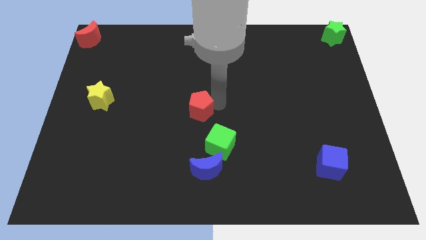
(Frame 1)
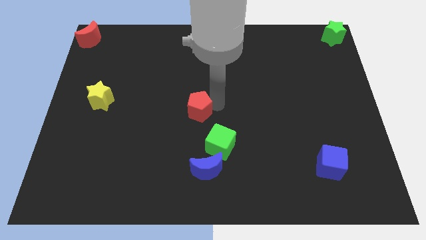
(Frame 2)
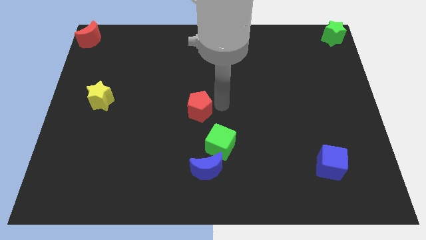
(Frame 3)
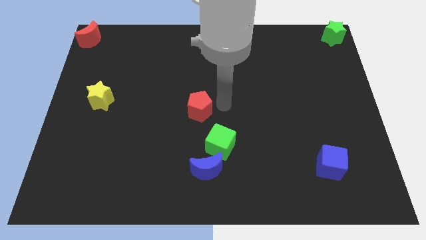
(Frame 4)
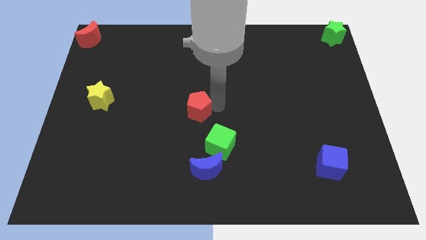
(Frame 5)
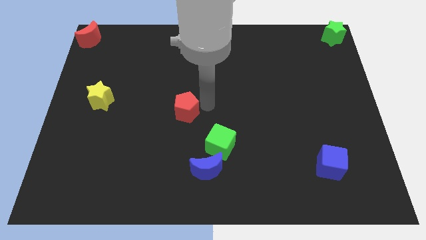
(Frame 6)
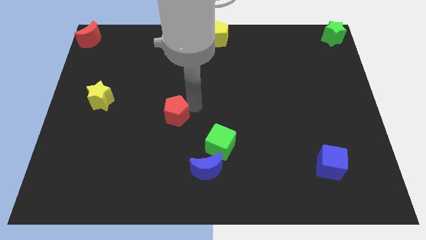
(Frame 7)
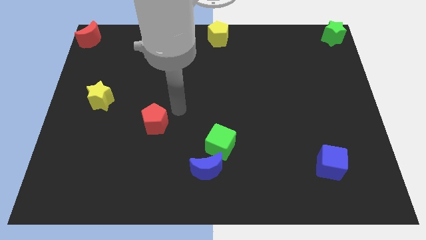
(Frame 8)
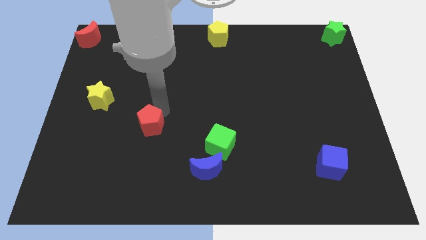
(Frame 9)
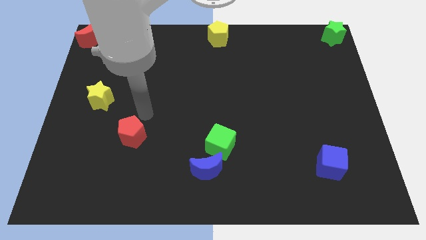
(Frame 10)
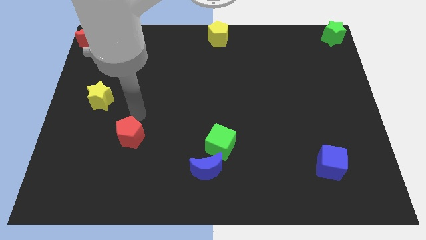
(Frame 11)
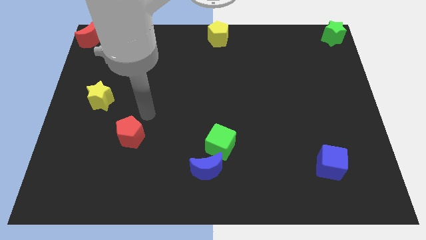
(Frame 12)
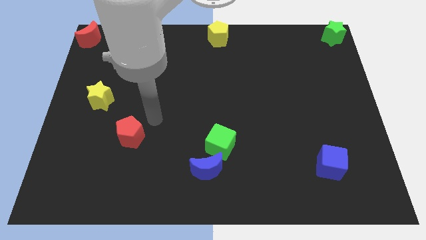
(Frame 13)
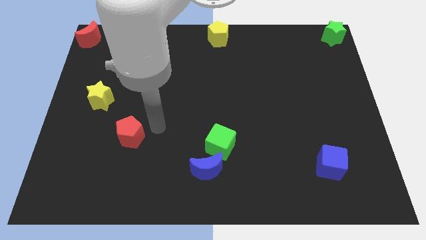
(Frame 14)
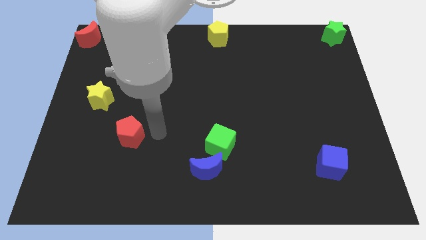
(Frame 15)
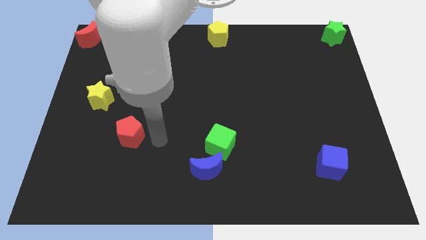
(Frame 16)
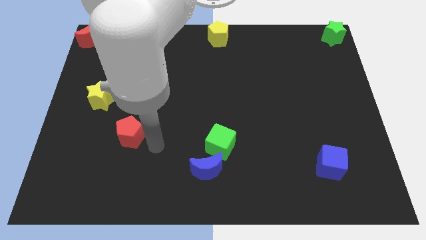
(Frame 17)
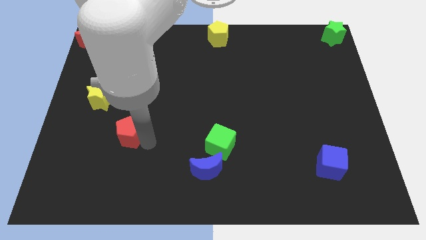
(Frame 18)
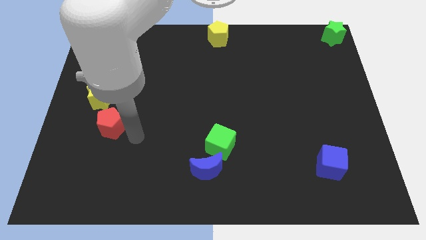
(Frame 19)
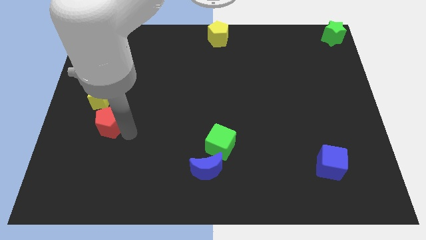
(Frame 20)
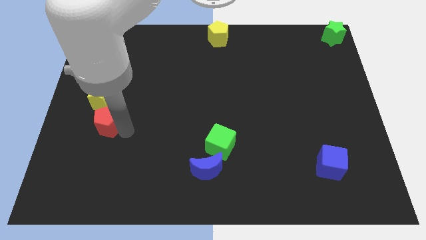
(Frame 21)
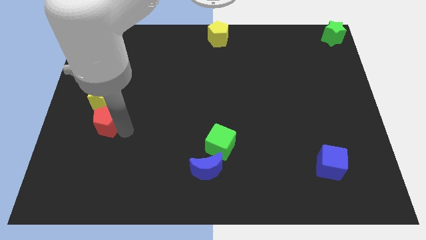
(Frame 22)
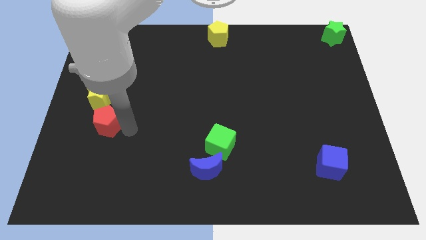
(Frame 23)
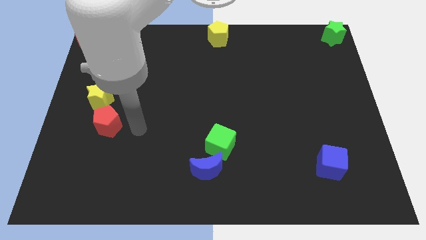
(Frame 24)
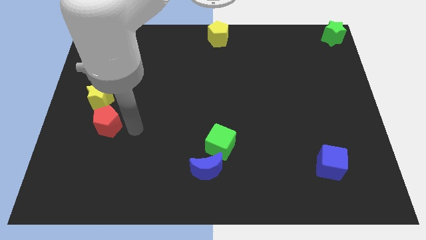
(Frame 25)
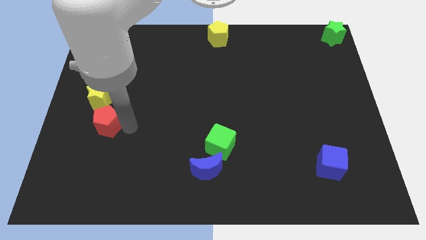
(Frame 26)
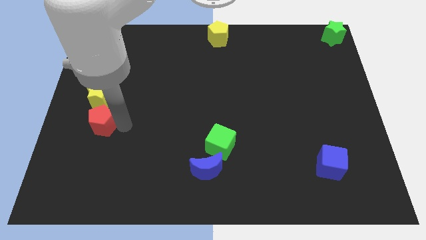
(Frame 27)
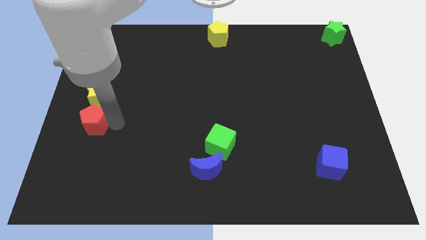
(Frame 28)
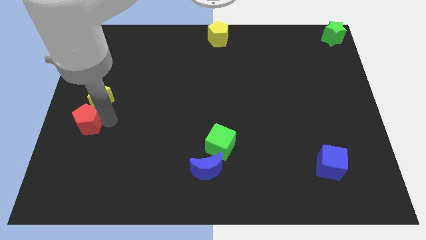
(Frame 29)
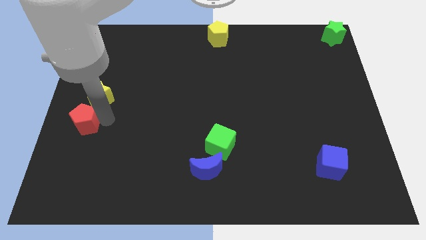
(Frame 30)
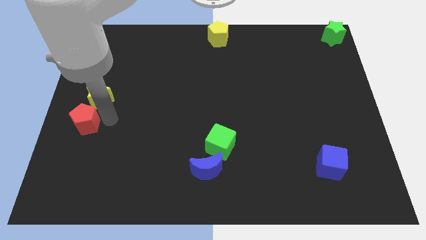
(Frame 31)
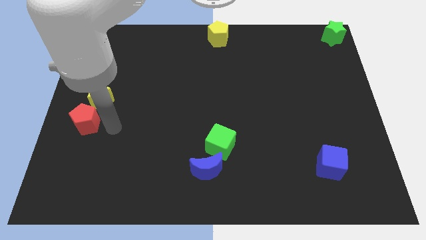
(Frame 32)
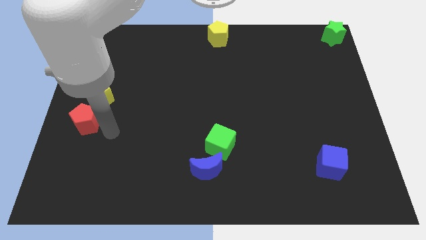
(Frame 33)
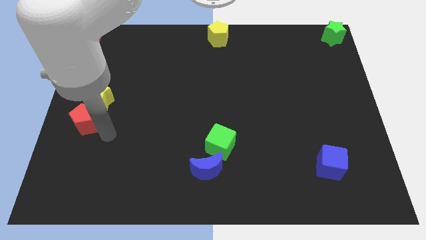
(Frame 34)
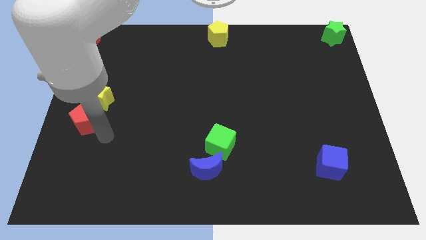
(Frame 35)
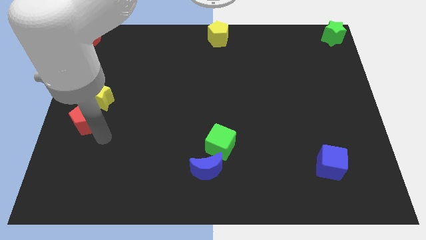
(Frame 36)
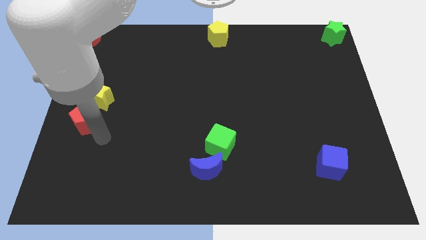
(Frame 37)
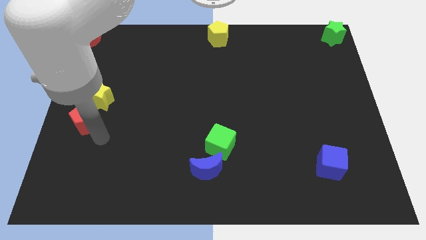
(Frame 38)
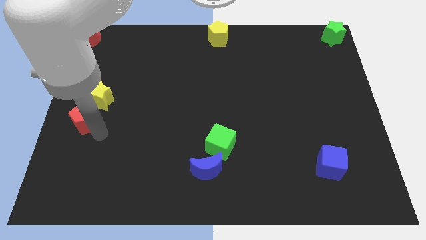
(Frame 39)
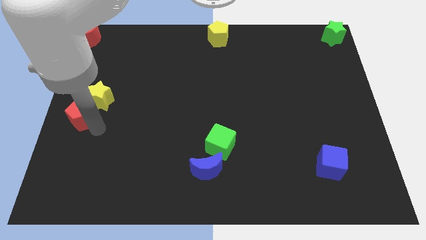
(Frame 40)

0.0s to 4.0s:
place the red pentagon at the bottom of the yellow star which is at the left side of the board

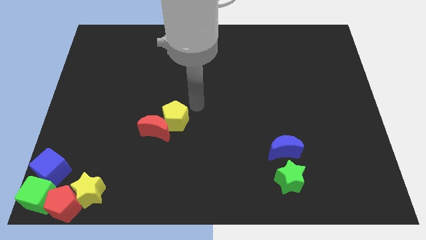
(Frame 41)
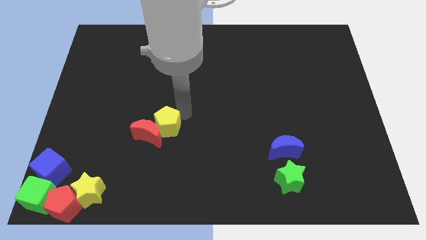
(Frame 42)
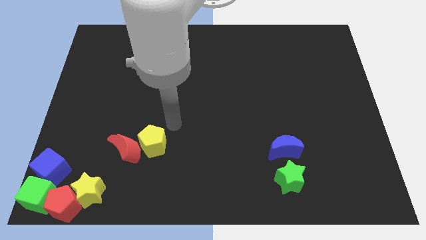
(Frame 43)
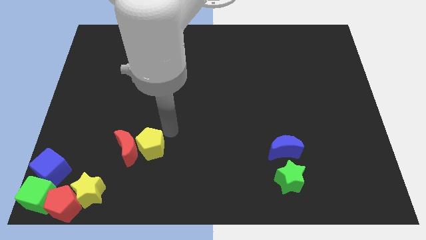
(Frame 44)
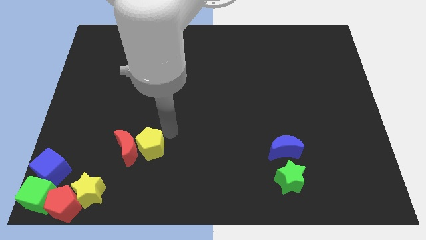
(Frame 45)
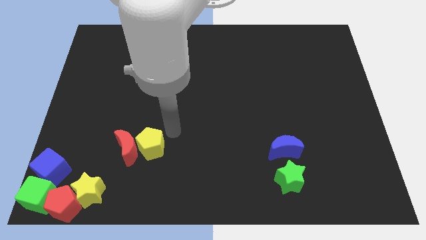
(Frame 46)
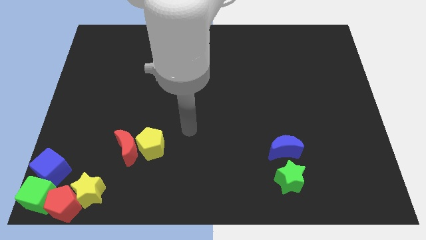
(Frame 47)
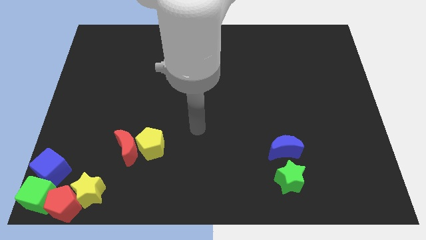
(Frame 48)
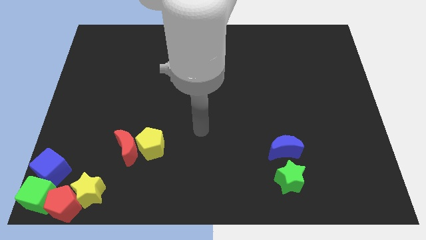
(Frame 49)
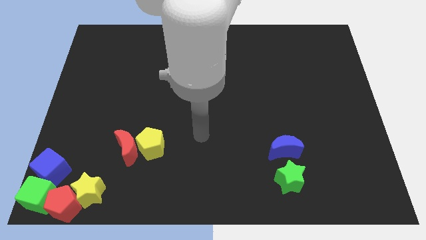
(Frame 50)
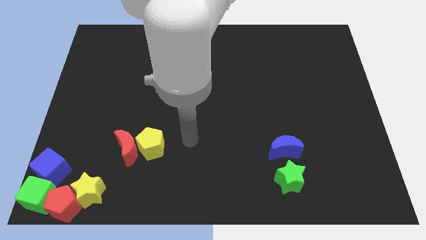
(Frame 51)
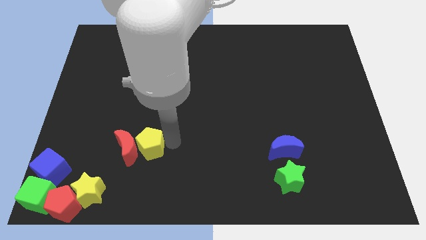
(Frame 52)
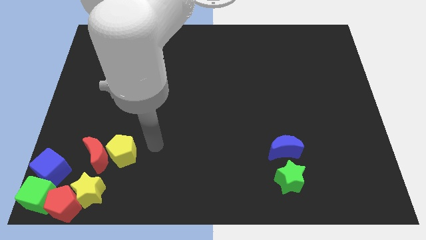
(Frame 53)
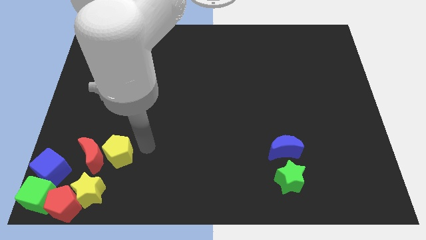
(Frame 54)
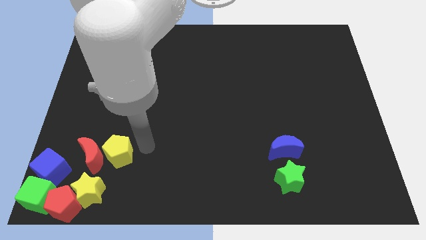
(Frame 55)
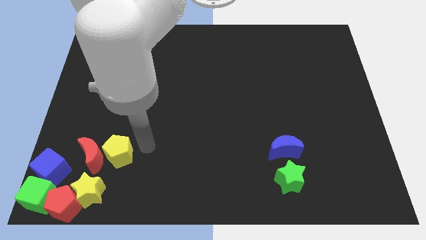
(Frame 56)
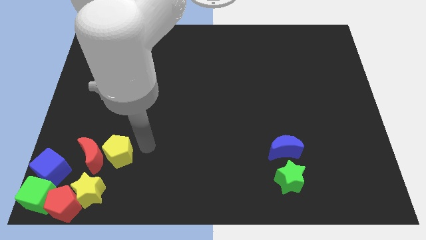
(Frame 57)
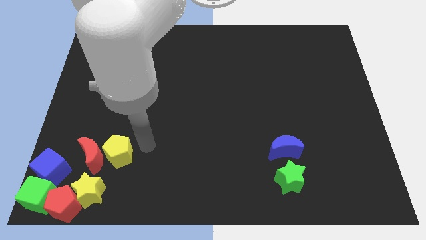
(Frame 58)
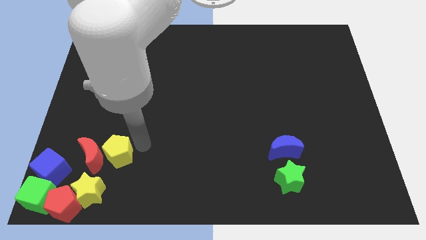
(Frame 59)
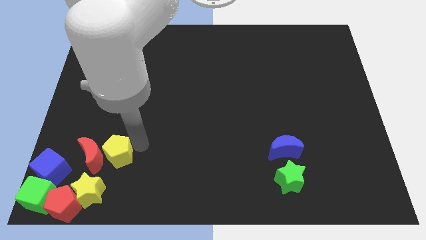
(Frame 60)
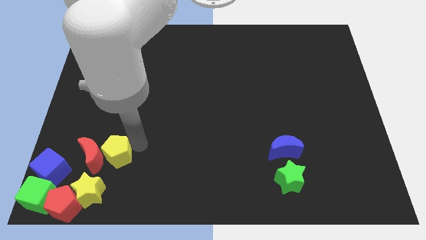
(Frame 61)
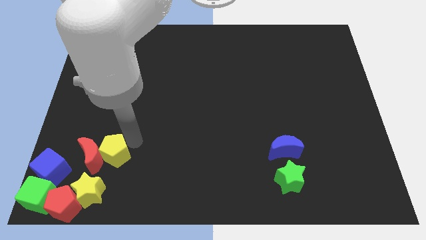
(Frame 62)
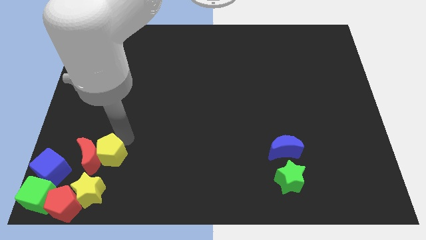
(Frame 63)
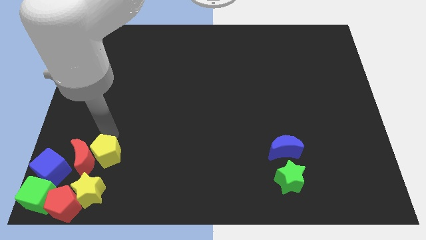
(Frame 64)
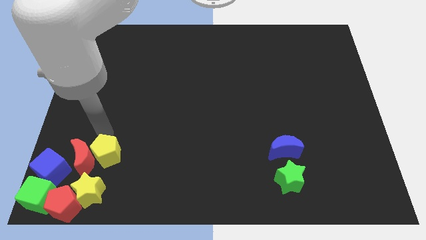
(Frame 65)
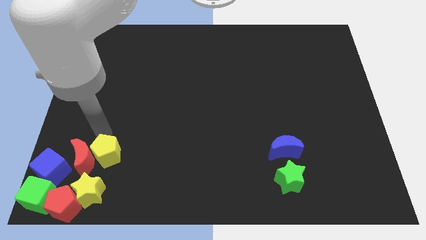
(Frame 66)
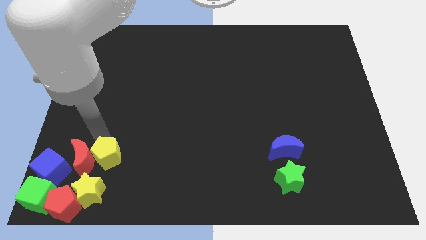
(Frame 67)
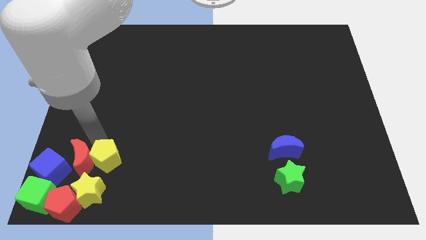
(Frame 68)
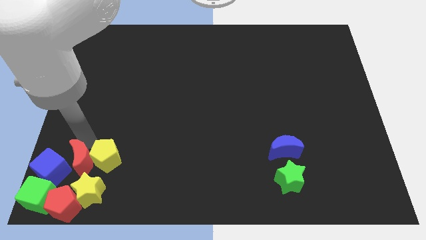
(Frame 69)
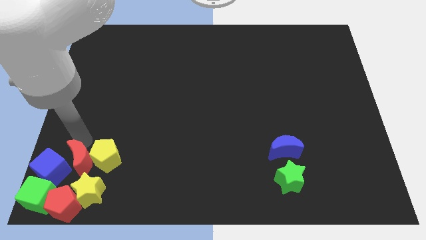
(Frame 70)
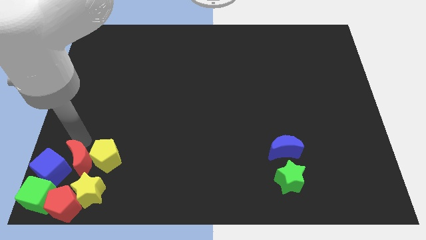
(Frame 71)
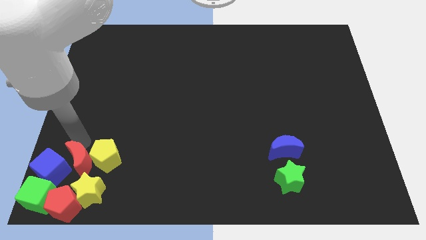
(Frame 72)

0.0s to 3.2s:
move the red crescent and yellow pentagon diagonally on the top right side of the blue cube

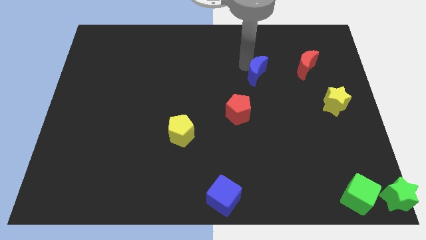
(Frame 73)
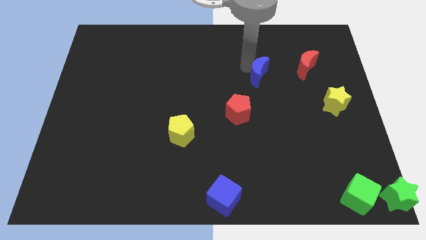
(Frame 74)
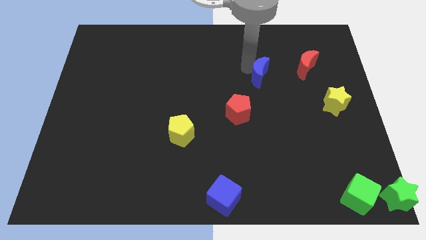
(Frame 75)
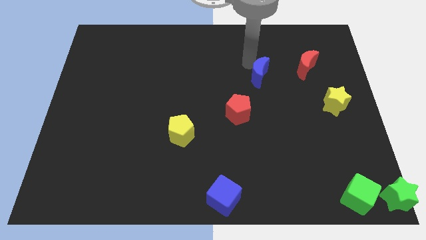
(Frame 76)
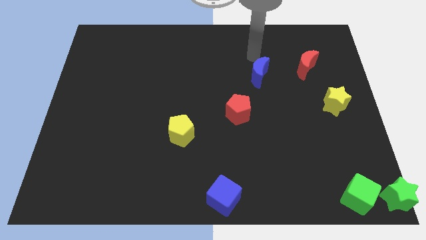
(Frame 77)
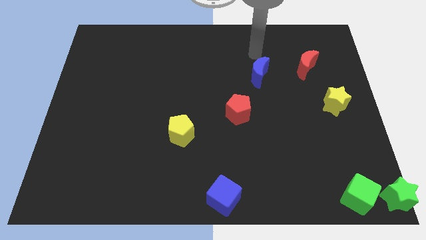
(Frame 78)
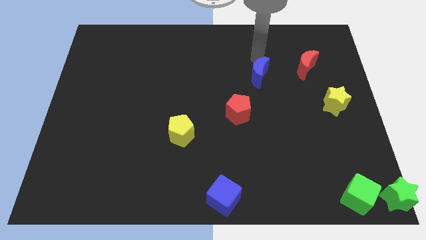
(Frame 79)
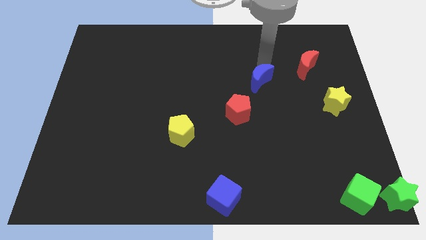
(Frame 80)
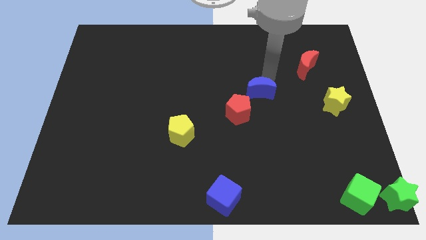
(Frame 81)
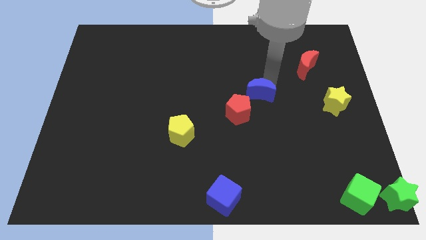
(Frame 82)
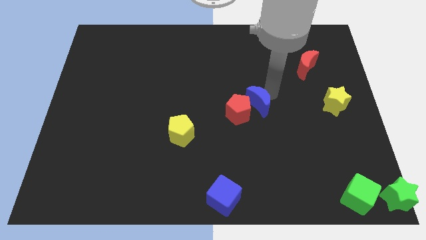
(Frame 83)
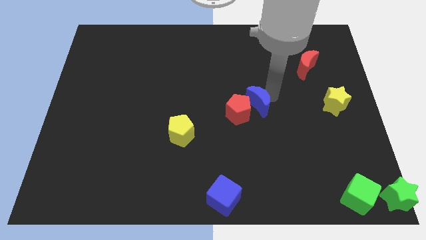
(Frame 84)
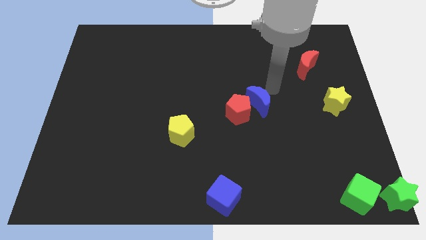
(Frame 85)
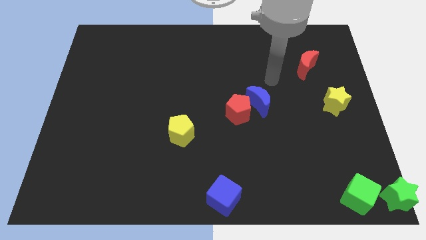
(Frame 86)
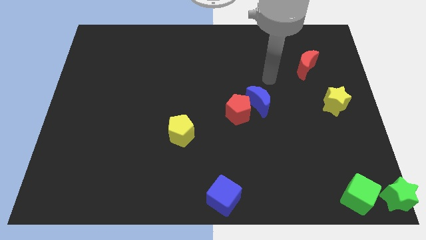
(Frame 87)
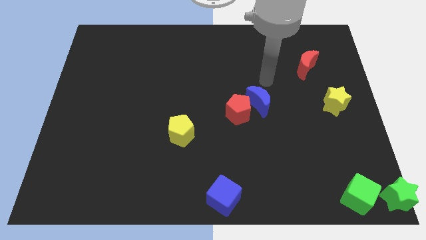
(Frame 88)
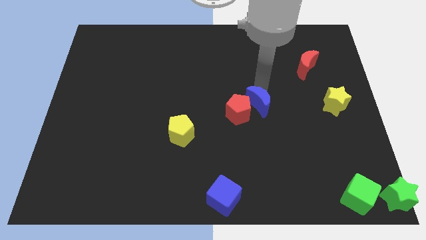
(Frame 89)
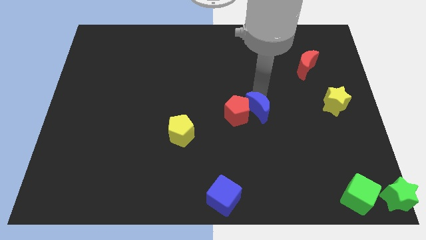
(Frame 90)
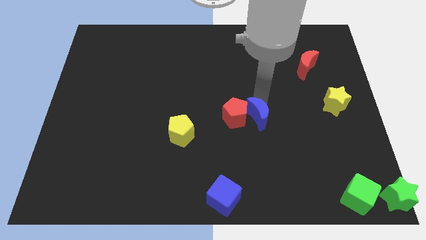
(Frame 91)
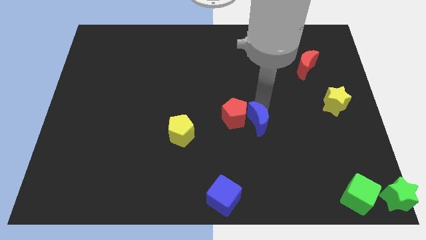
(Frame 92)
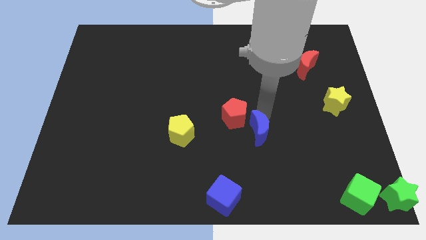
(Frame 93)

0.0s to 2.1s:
push the blue crescent into red pentagon
